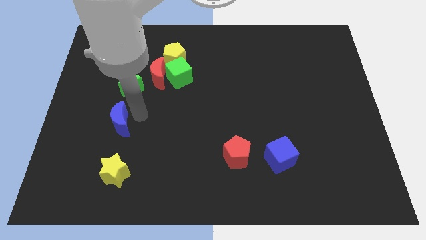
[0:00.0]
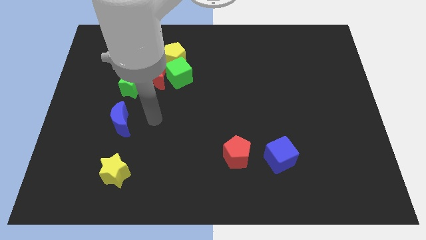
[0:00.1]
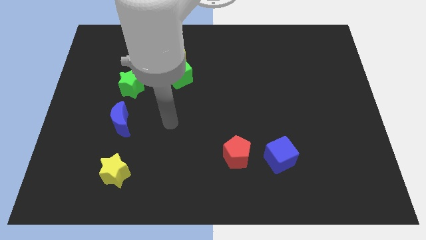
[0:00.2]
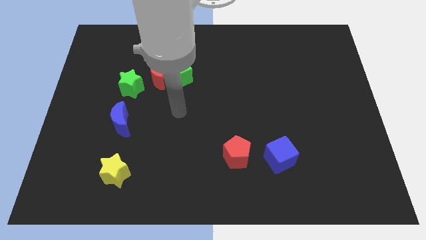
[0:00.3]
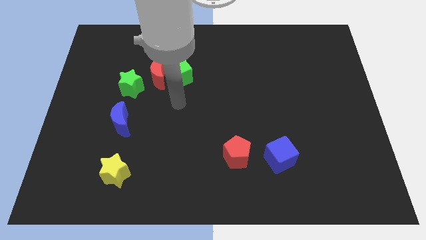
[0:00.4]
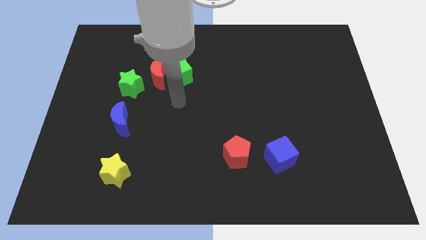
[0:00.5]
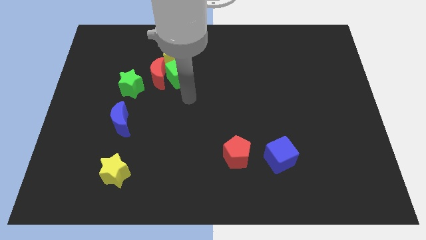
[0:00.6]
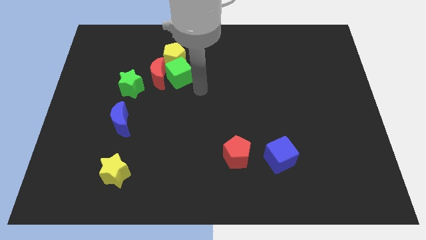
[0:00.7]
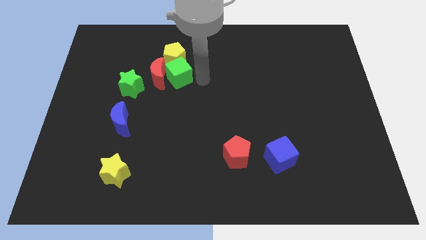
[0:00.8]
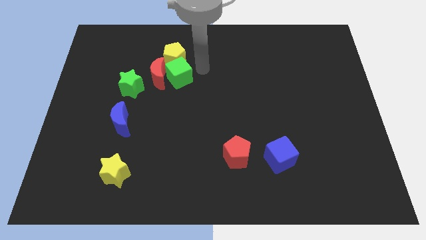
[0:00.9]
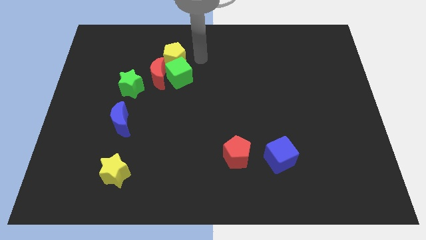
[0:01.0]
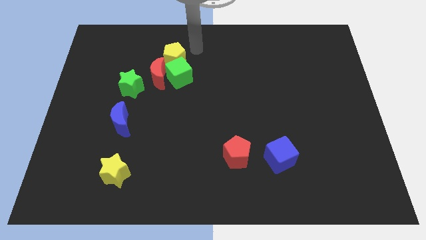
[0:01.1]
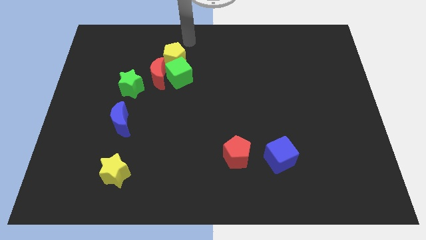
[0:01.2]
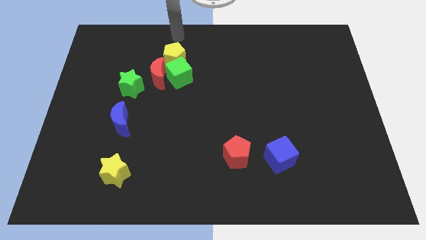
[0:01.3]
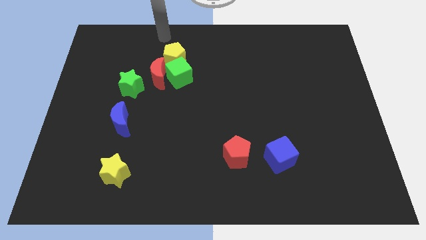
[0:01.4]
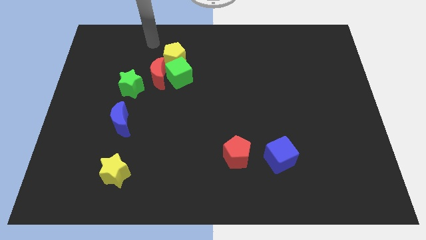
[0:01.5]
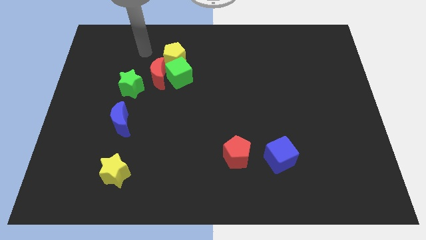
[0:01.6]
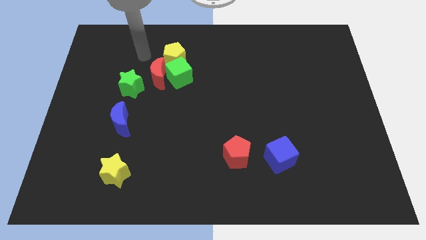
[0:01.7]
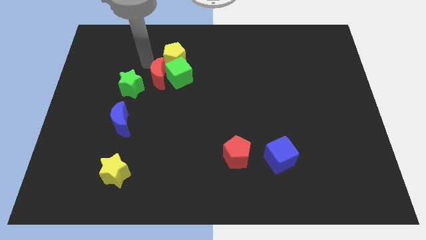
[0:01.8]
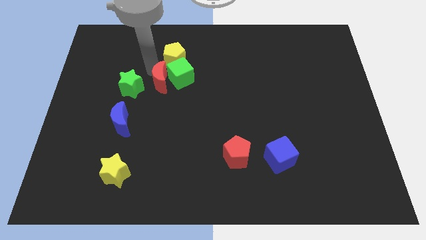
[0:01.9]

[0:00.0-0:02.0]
go near red moon

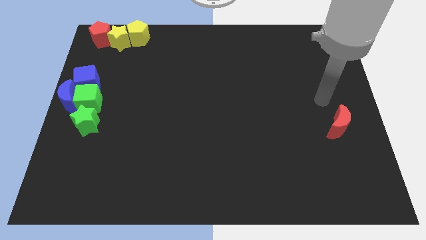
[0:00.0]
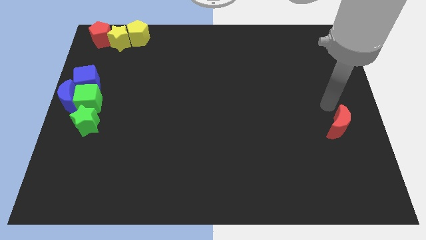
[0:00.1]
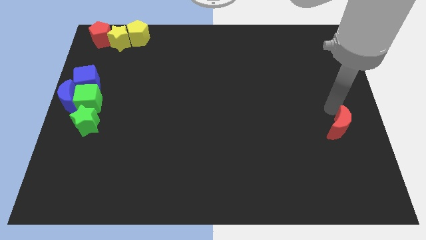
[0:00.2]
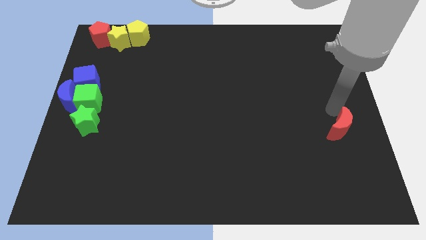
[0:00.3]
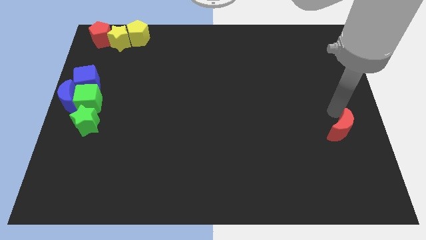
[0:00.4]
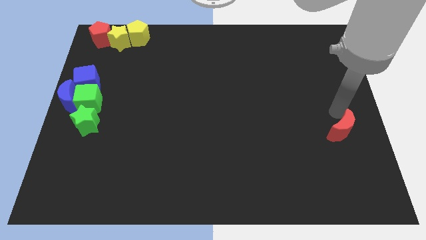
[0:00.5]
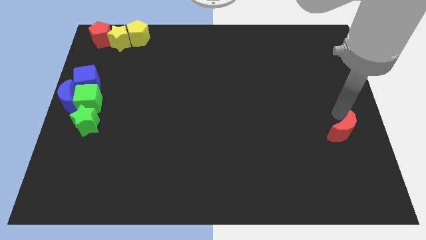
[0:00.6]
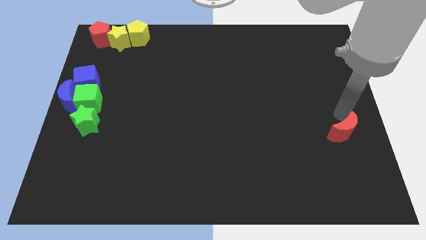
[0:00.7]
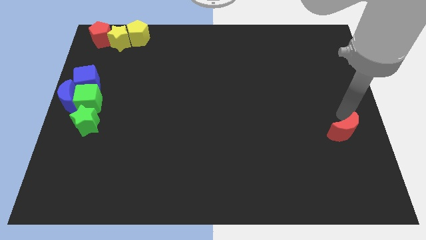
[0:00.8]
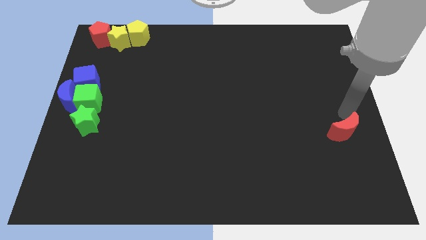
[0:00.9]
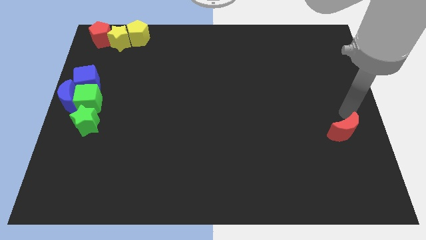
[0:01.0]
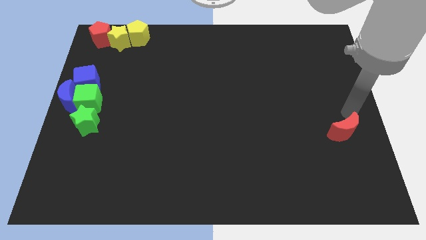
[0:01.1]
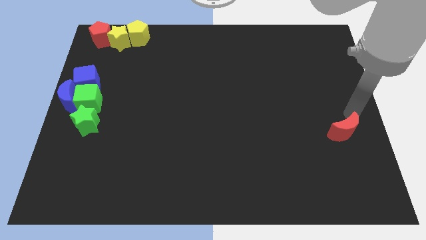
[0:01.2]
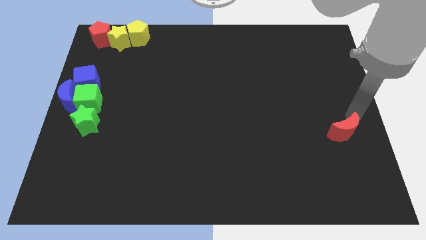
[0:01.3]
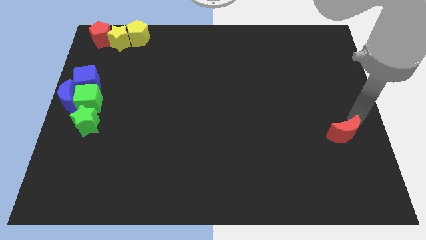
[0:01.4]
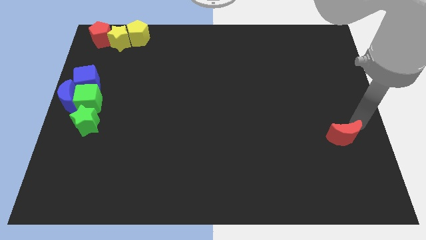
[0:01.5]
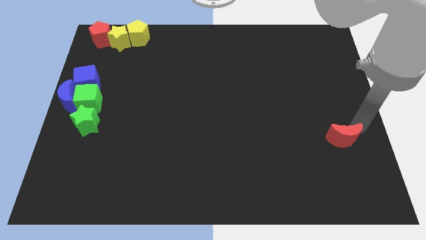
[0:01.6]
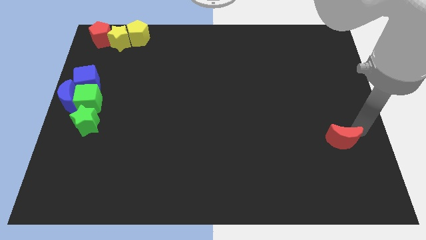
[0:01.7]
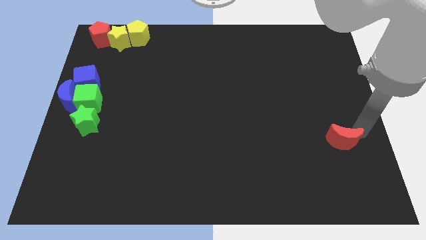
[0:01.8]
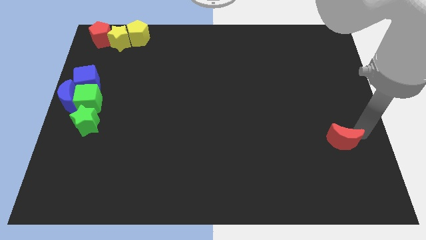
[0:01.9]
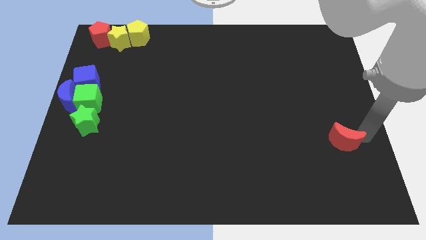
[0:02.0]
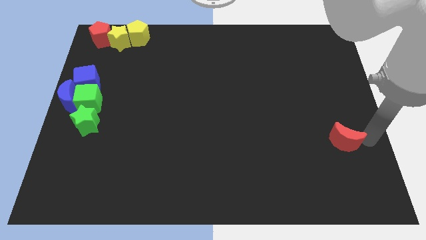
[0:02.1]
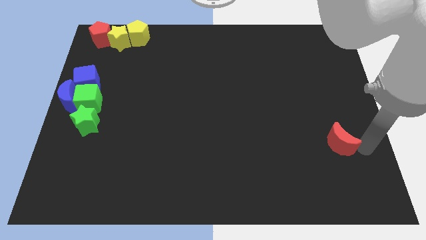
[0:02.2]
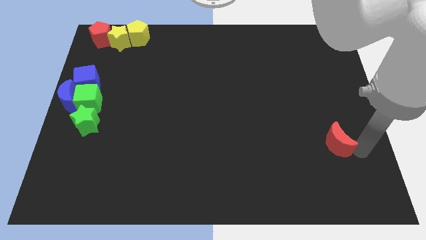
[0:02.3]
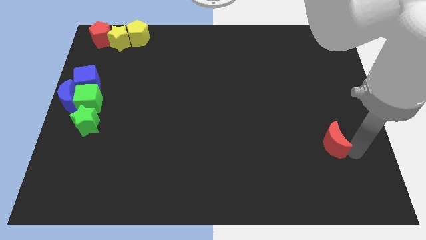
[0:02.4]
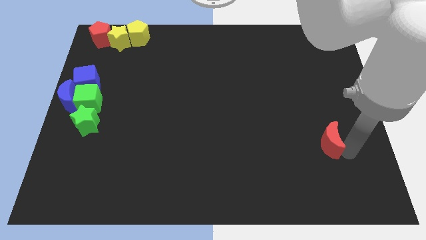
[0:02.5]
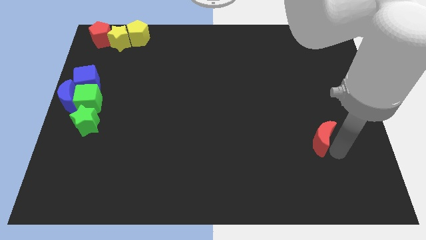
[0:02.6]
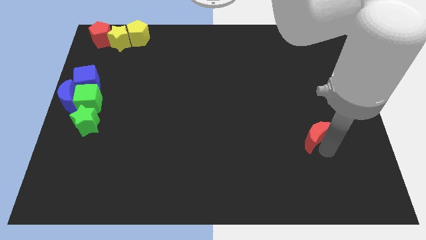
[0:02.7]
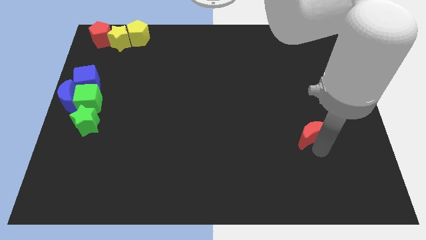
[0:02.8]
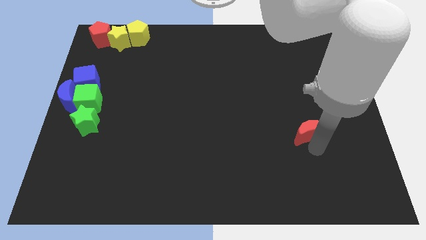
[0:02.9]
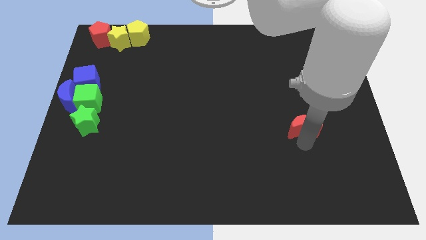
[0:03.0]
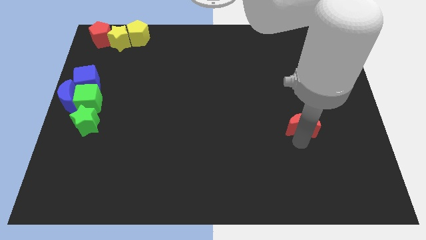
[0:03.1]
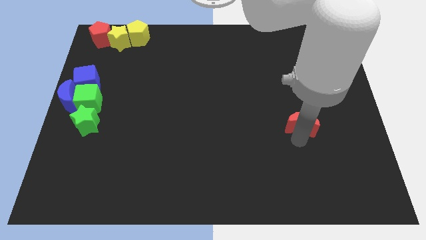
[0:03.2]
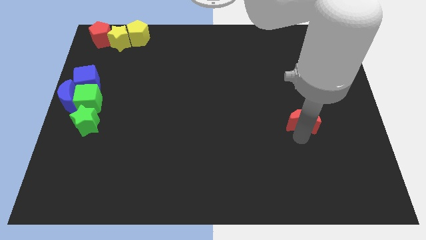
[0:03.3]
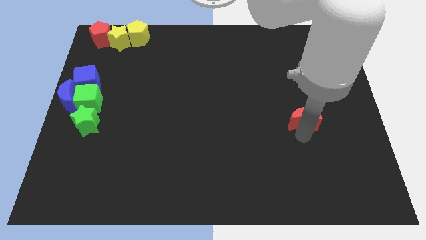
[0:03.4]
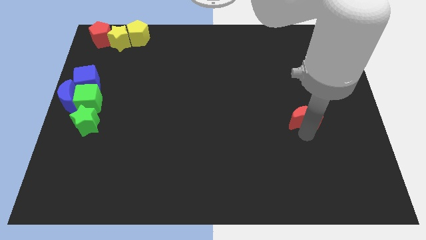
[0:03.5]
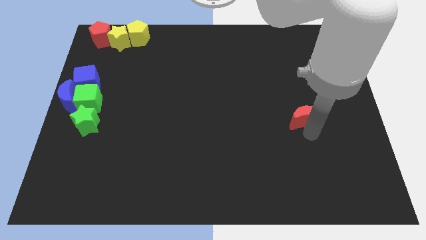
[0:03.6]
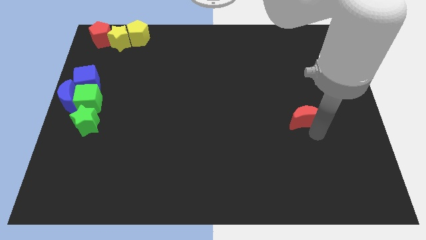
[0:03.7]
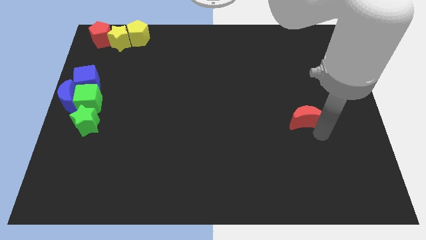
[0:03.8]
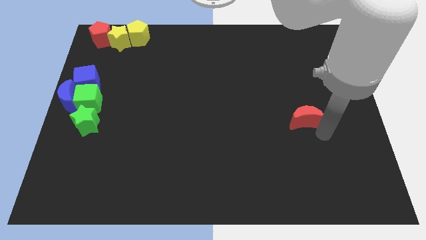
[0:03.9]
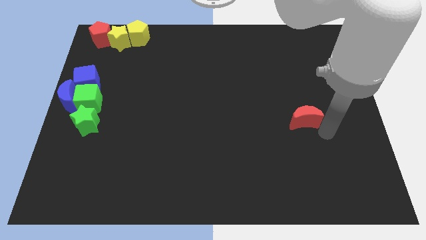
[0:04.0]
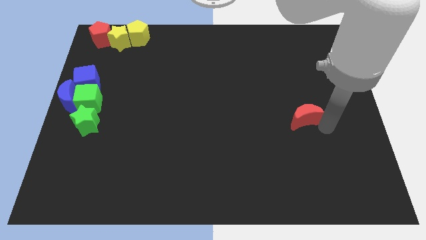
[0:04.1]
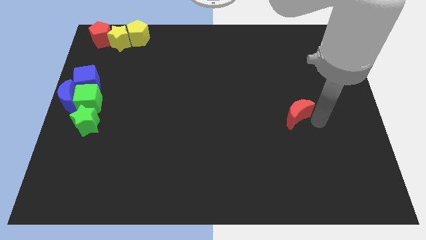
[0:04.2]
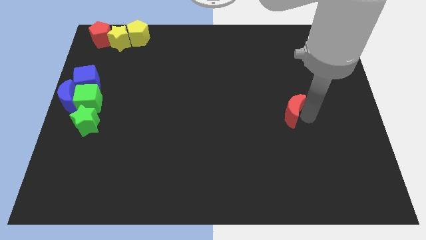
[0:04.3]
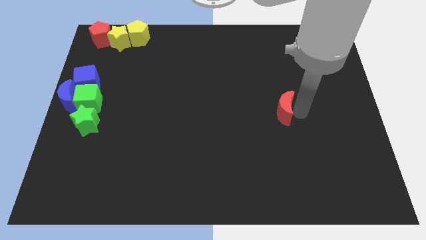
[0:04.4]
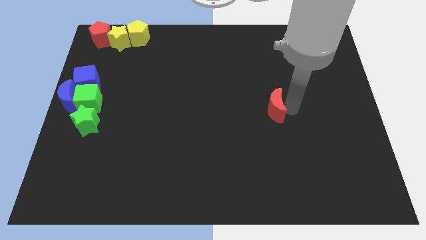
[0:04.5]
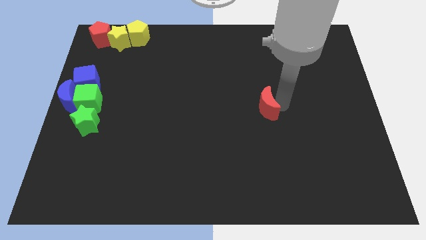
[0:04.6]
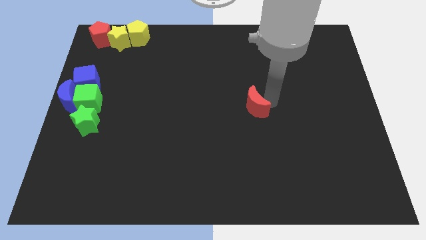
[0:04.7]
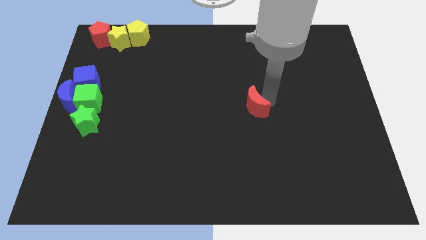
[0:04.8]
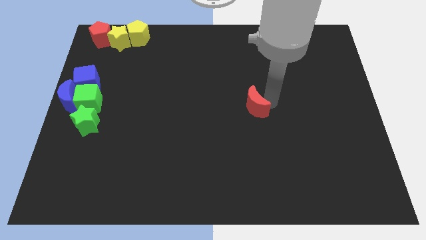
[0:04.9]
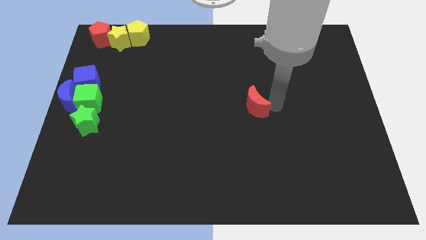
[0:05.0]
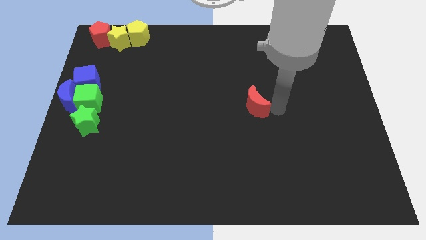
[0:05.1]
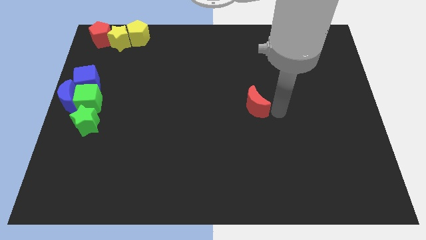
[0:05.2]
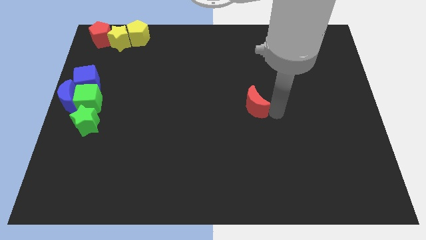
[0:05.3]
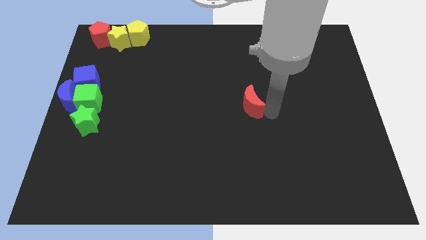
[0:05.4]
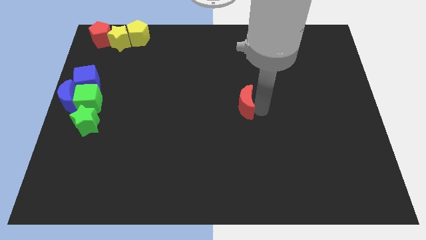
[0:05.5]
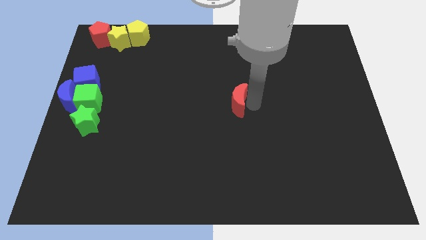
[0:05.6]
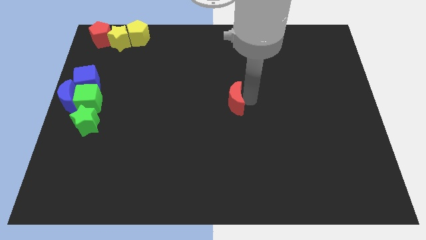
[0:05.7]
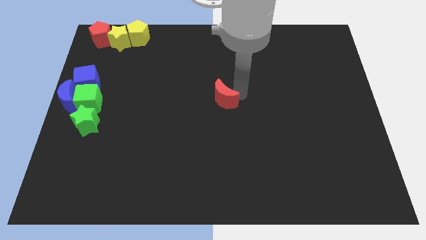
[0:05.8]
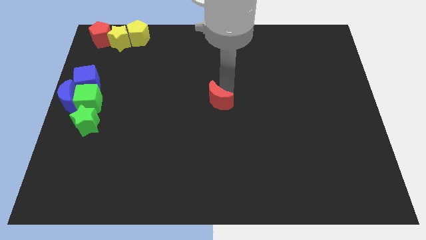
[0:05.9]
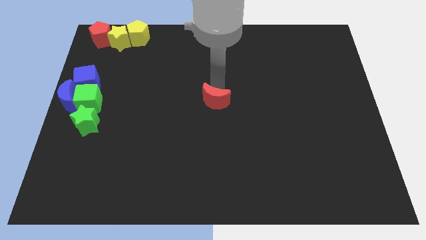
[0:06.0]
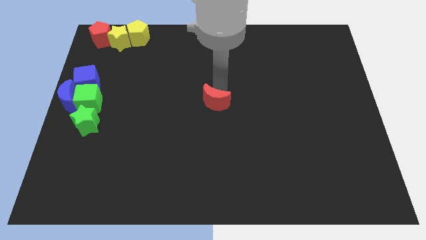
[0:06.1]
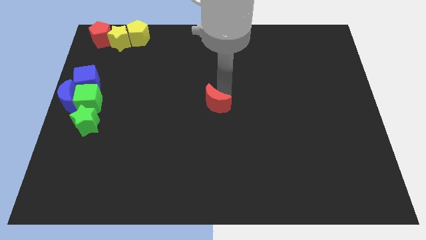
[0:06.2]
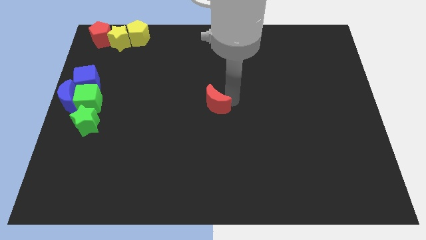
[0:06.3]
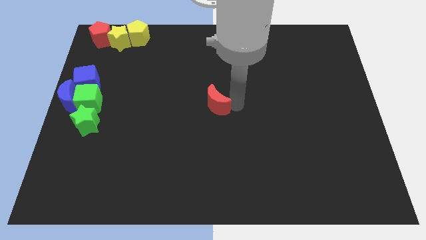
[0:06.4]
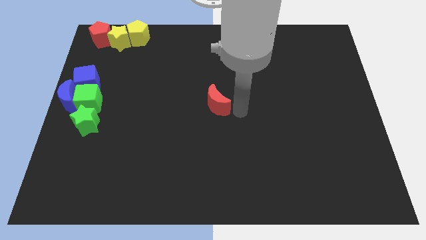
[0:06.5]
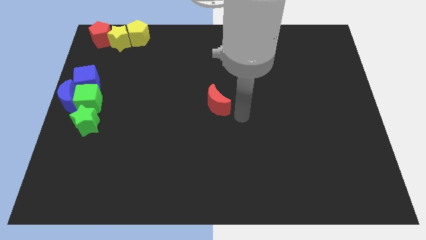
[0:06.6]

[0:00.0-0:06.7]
place the red crescent at the center of the board

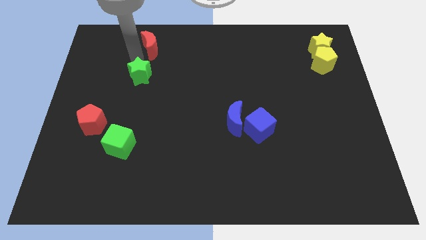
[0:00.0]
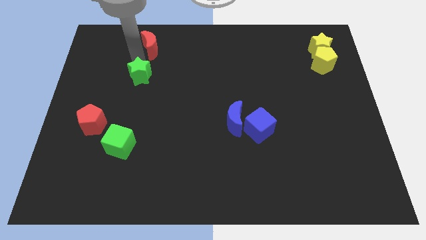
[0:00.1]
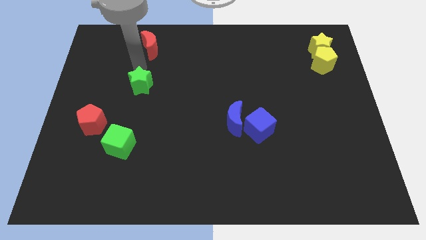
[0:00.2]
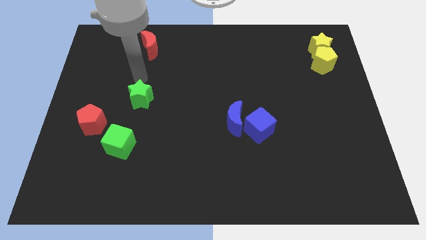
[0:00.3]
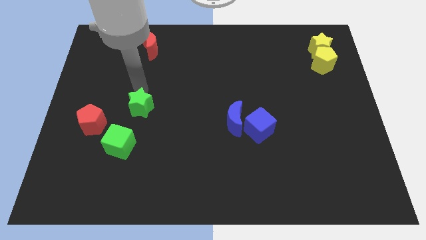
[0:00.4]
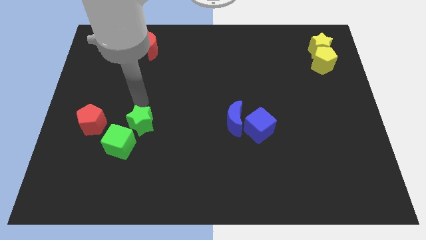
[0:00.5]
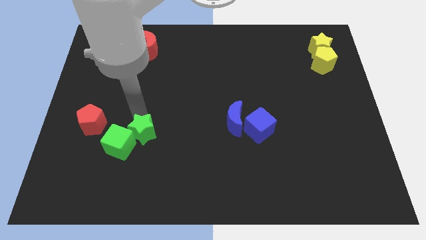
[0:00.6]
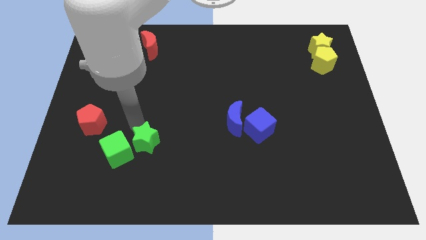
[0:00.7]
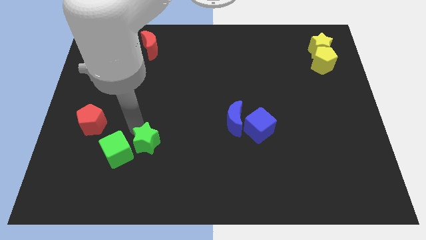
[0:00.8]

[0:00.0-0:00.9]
push green star into the green cube
